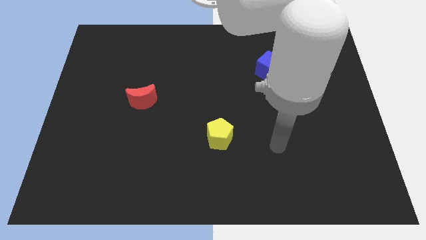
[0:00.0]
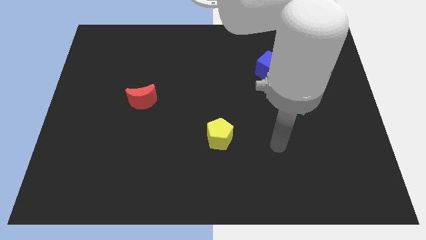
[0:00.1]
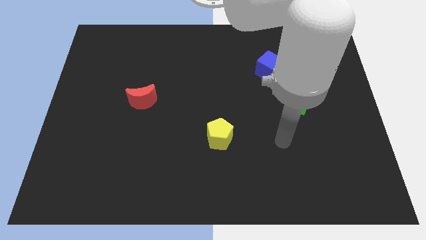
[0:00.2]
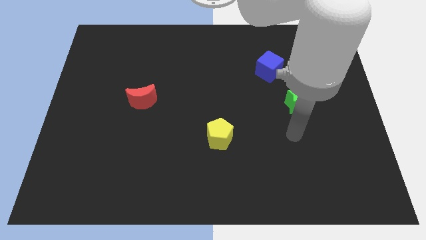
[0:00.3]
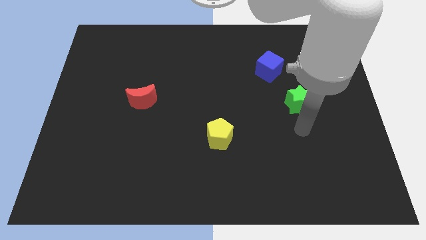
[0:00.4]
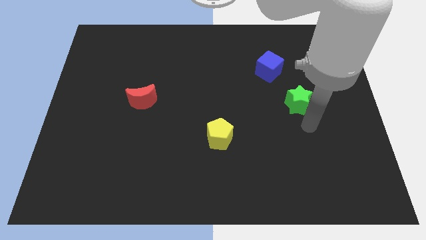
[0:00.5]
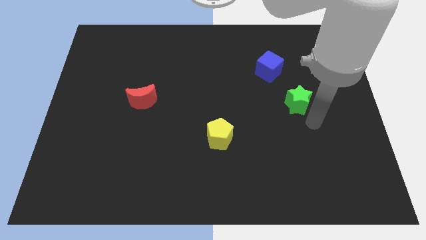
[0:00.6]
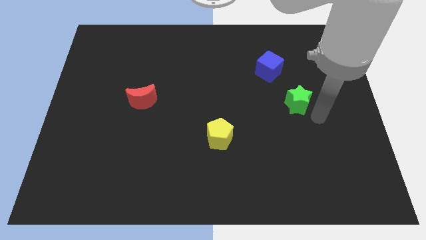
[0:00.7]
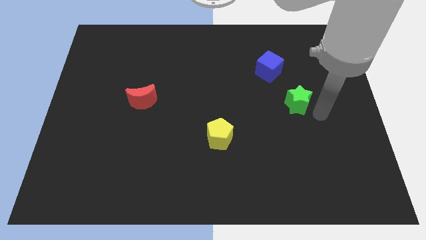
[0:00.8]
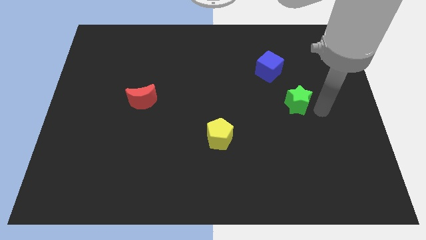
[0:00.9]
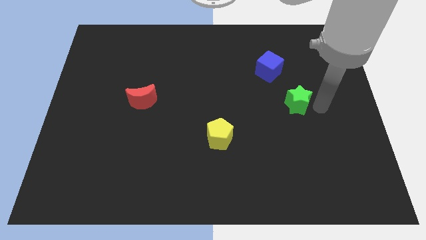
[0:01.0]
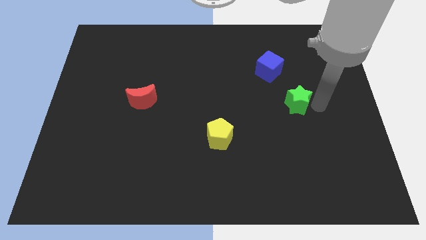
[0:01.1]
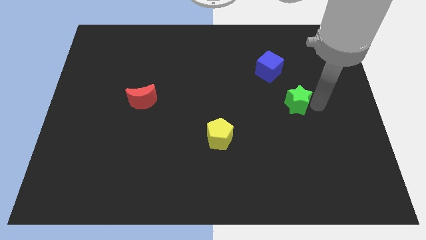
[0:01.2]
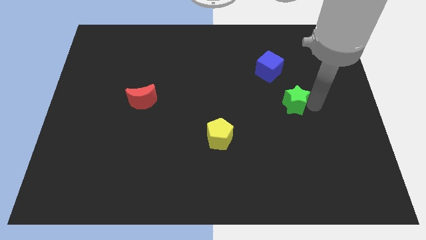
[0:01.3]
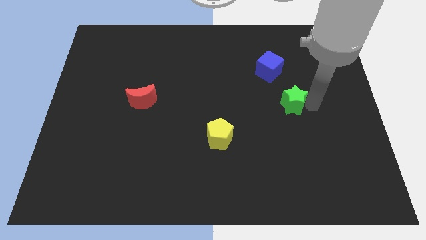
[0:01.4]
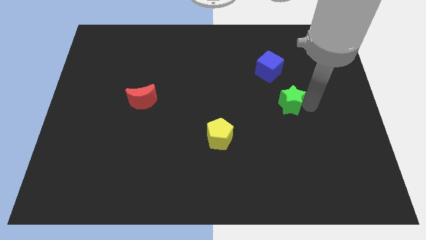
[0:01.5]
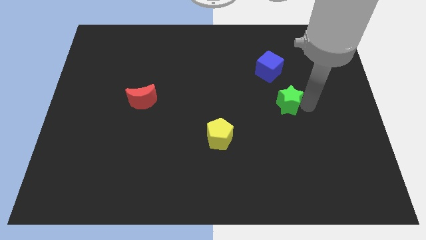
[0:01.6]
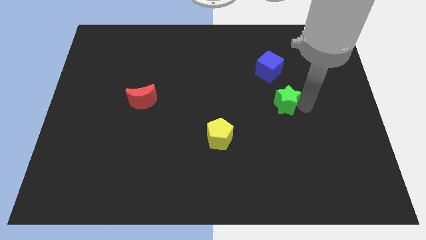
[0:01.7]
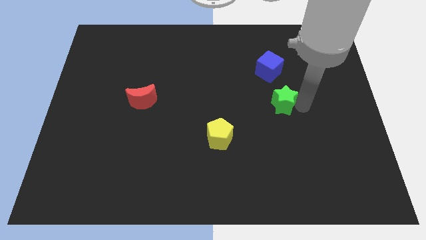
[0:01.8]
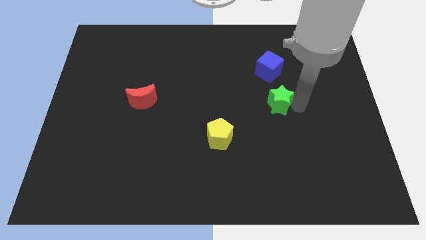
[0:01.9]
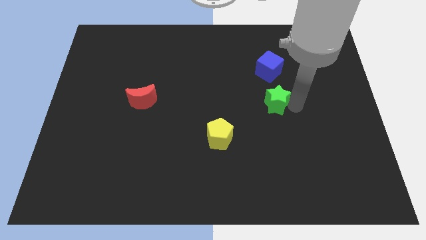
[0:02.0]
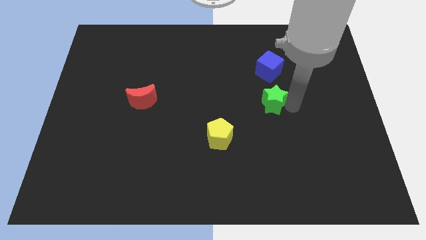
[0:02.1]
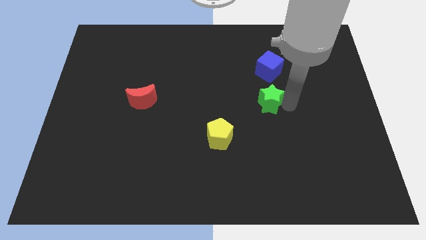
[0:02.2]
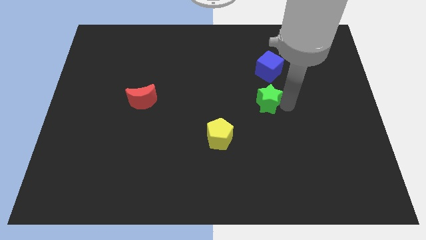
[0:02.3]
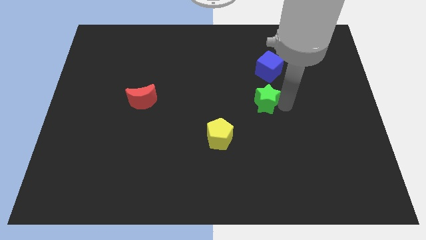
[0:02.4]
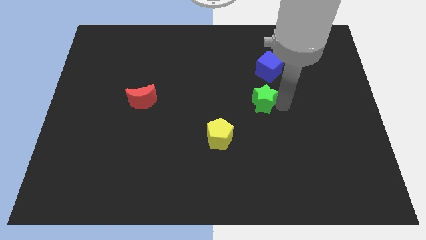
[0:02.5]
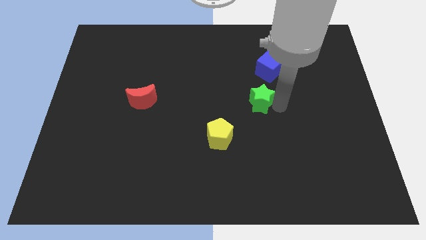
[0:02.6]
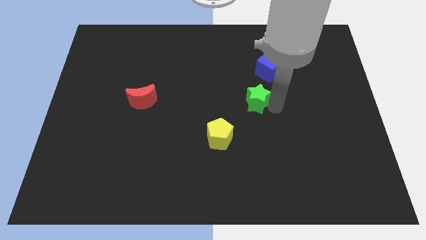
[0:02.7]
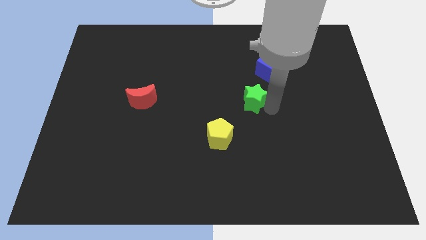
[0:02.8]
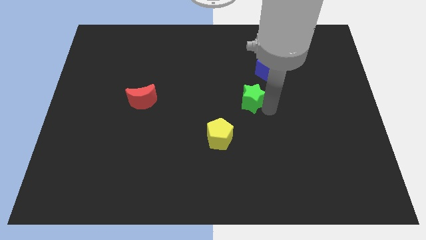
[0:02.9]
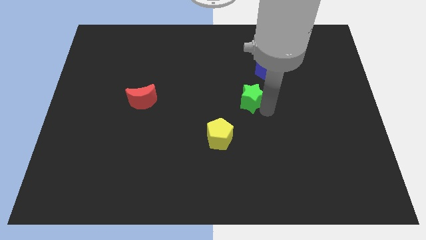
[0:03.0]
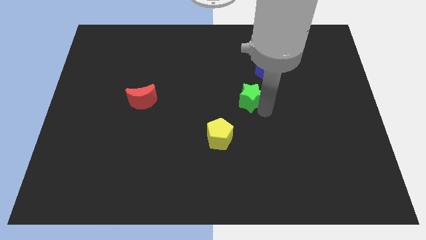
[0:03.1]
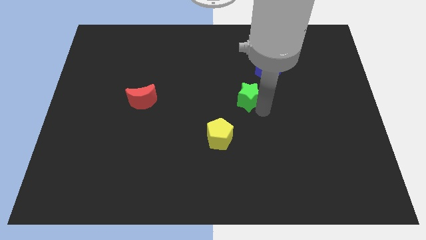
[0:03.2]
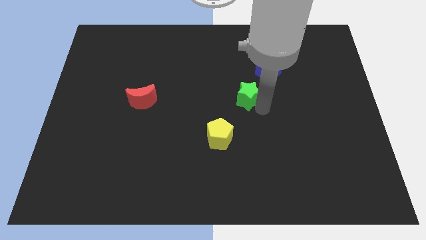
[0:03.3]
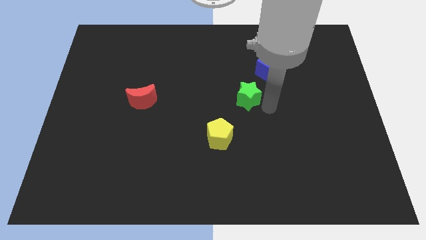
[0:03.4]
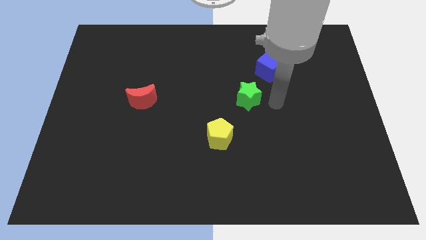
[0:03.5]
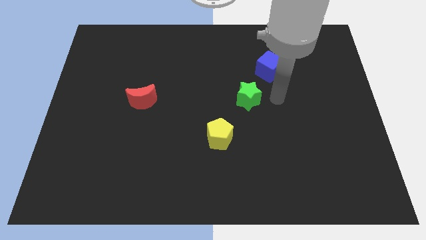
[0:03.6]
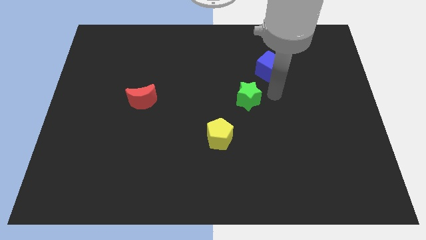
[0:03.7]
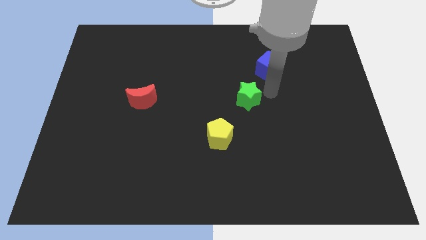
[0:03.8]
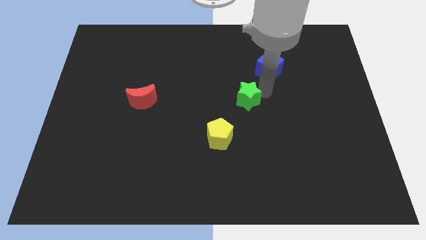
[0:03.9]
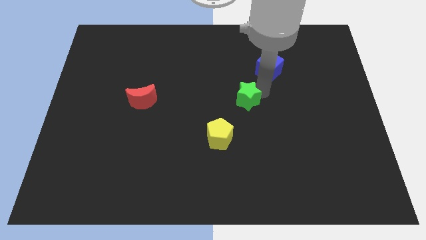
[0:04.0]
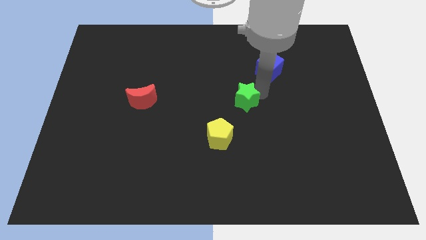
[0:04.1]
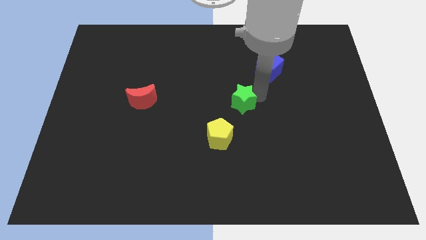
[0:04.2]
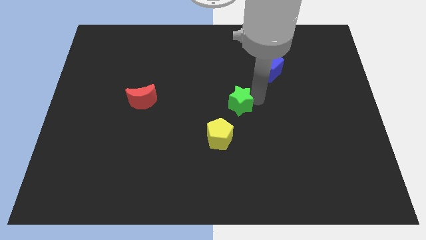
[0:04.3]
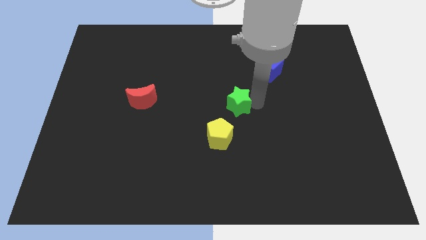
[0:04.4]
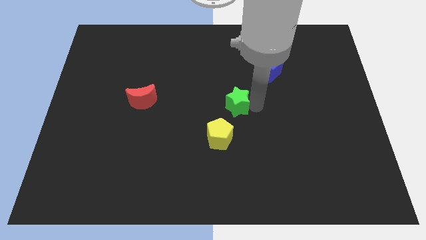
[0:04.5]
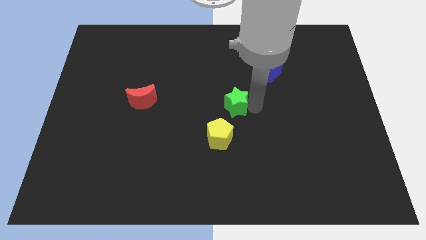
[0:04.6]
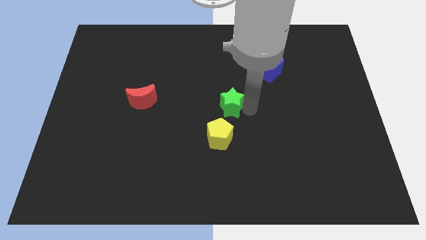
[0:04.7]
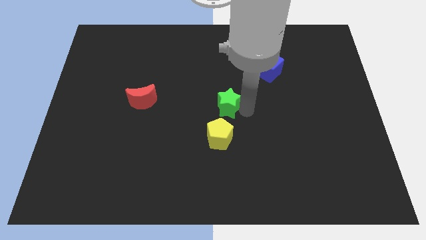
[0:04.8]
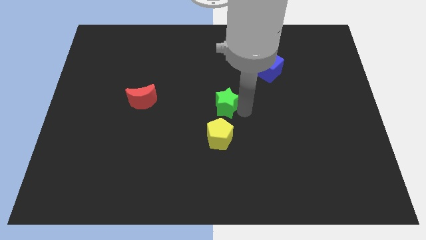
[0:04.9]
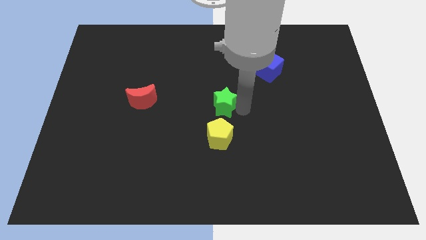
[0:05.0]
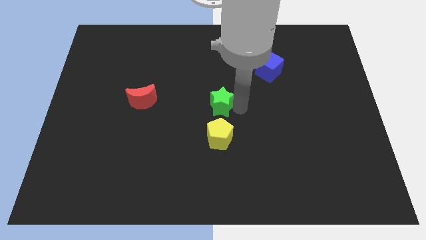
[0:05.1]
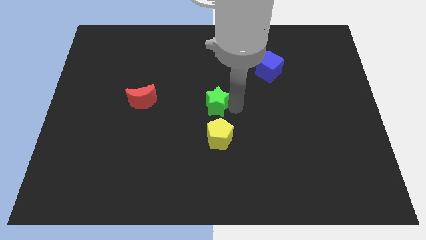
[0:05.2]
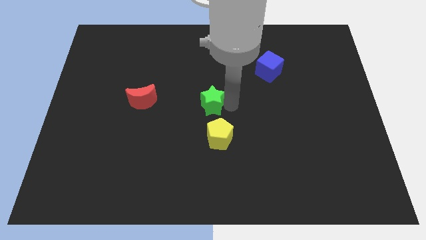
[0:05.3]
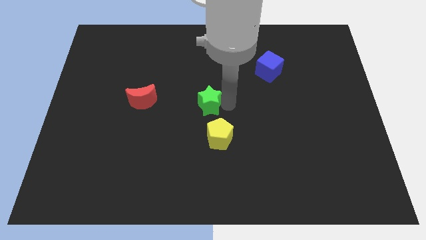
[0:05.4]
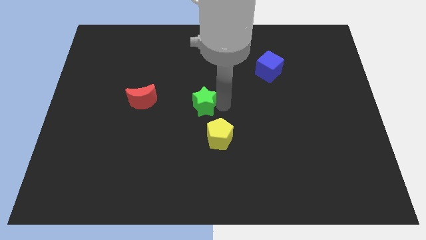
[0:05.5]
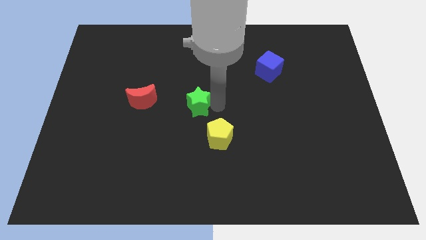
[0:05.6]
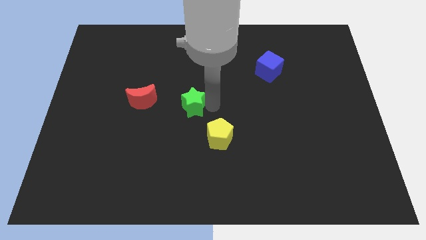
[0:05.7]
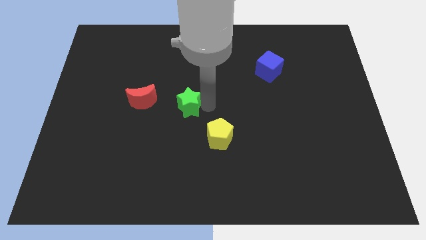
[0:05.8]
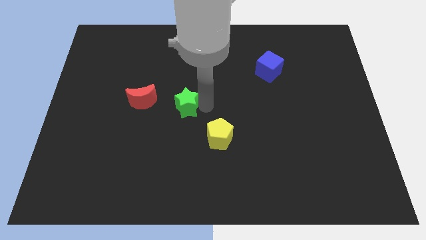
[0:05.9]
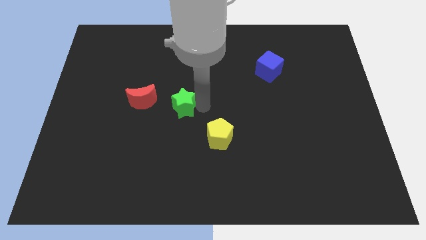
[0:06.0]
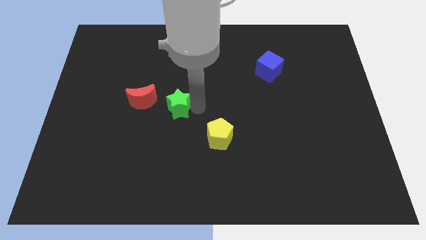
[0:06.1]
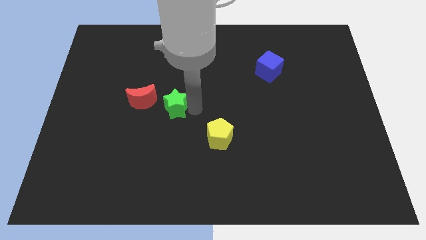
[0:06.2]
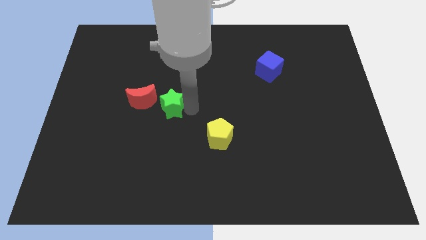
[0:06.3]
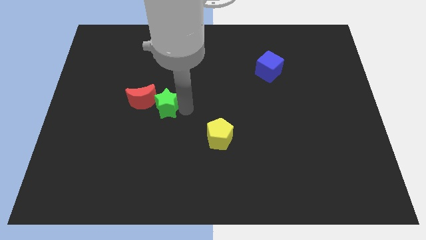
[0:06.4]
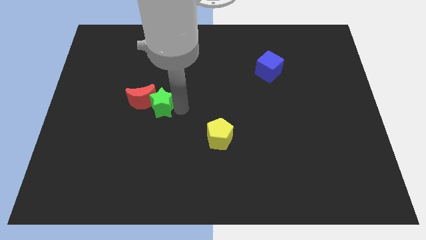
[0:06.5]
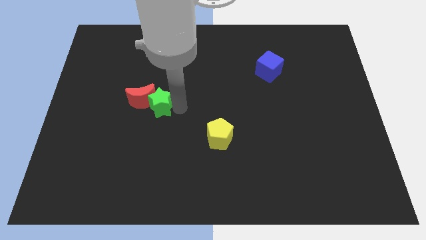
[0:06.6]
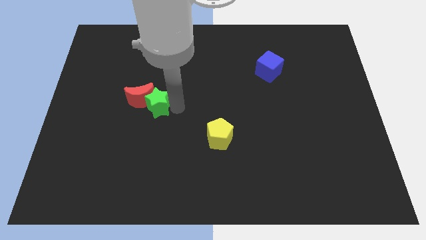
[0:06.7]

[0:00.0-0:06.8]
slide the green block to the moon

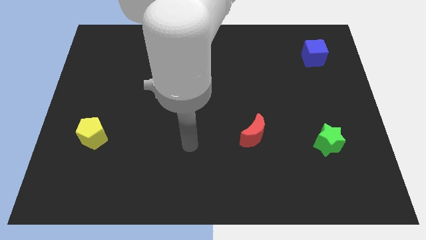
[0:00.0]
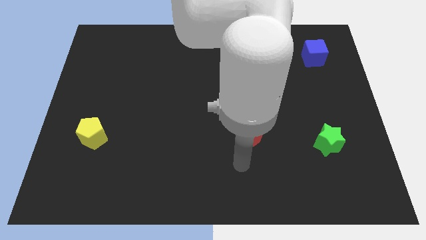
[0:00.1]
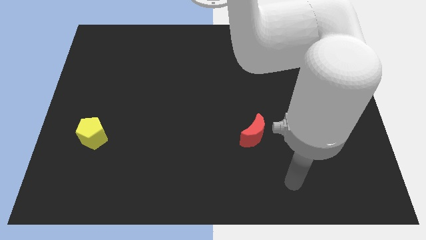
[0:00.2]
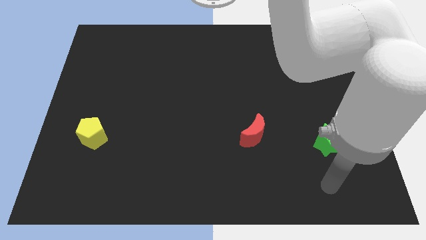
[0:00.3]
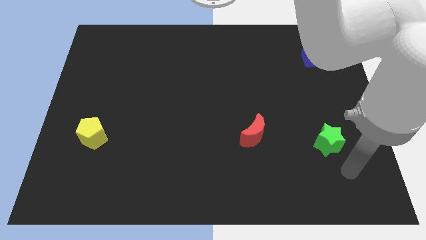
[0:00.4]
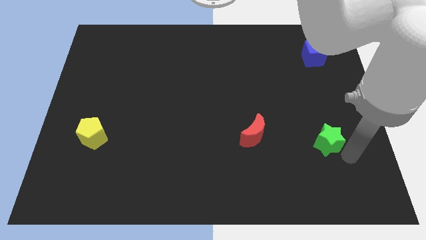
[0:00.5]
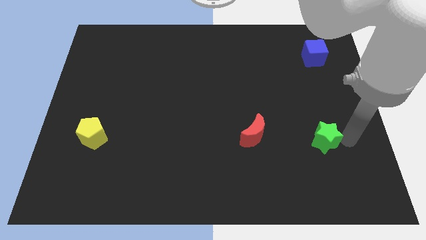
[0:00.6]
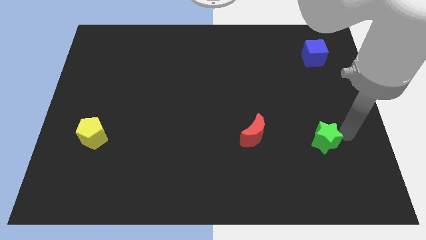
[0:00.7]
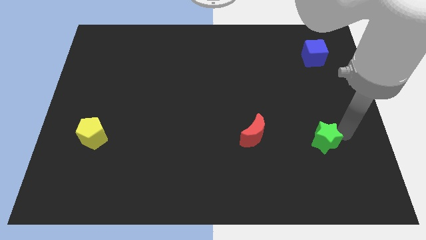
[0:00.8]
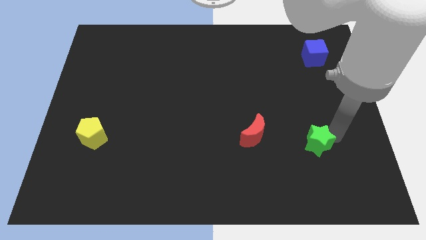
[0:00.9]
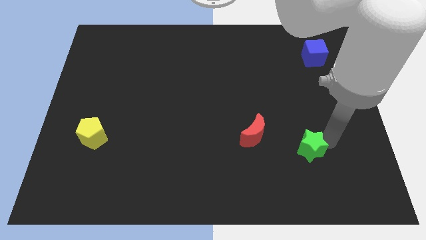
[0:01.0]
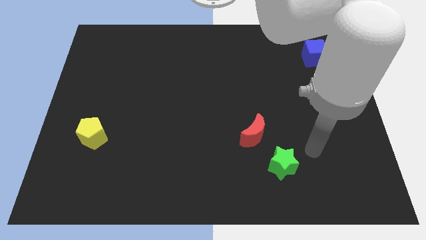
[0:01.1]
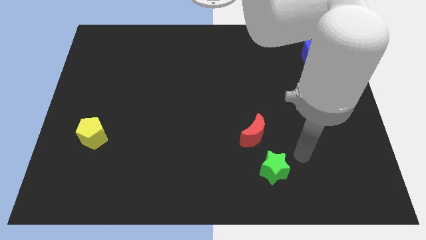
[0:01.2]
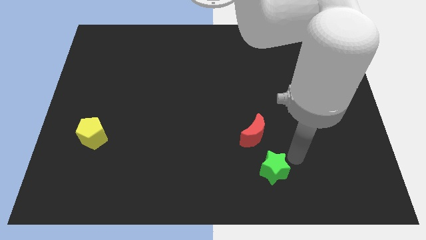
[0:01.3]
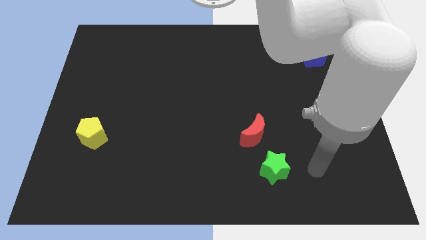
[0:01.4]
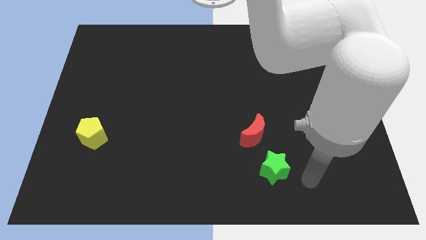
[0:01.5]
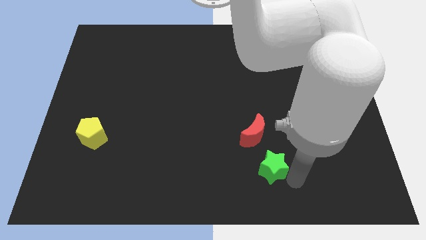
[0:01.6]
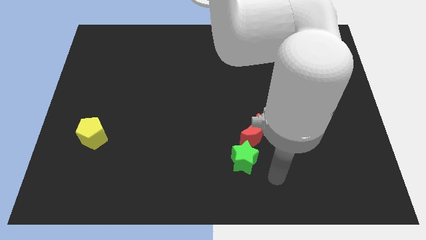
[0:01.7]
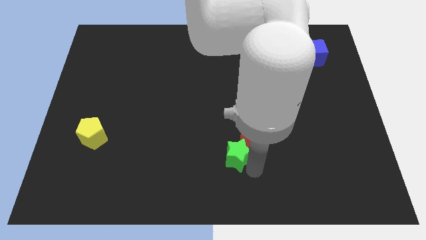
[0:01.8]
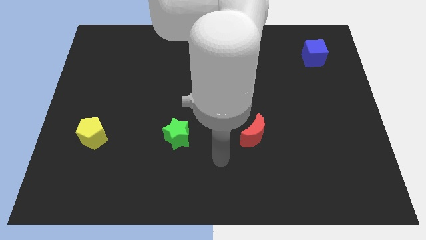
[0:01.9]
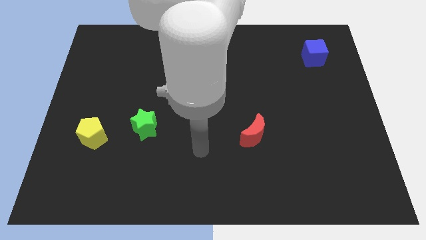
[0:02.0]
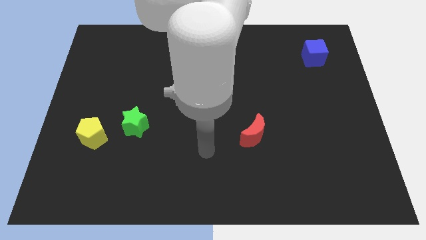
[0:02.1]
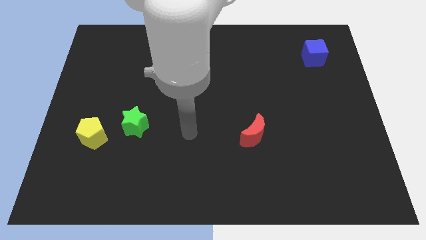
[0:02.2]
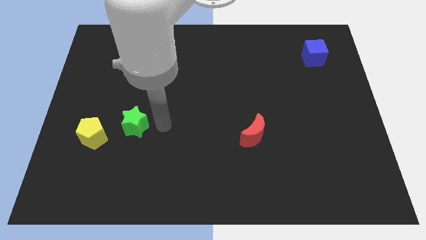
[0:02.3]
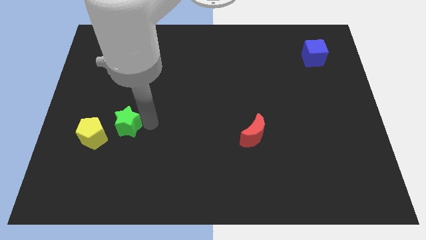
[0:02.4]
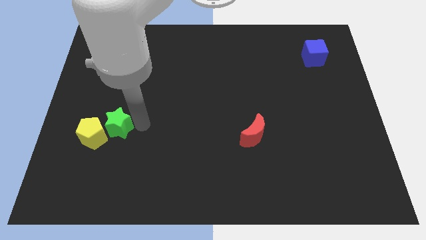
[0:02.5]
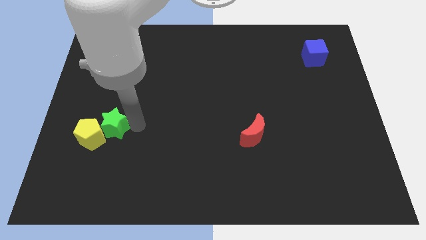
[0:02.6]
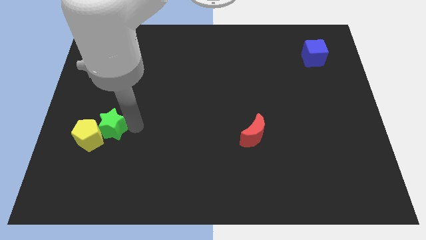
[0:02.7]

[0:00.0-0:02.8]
push the green block towards the pentagon
